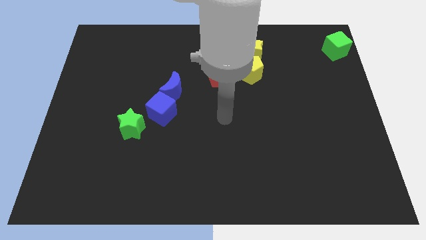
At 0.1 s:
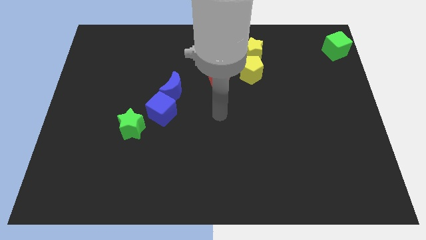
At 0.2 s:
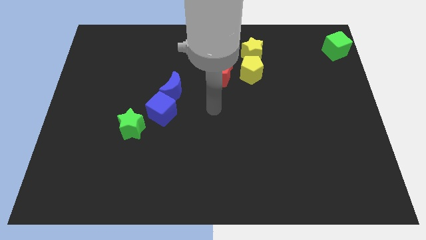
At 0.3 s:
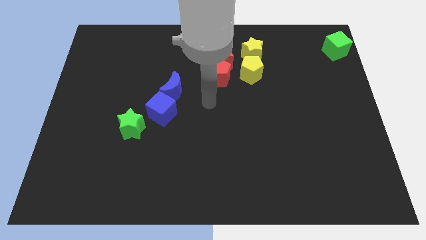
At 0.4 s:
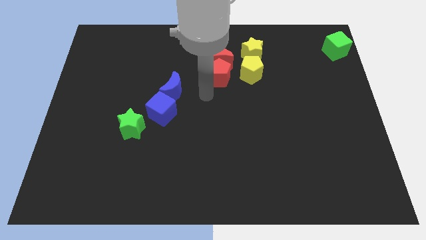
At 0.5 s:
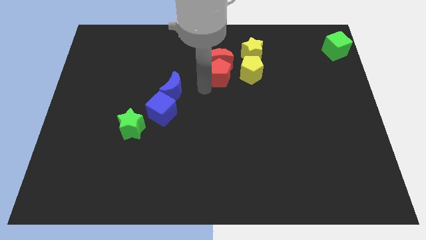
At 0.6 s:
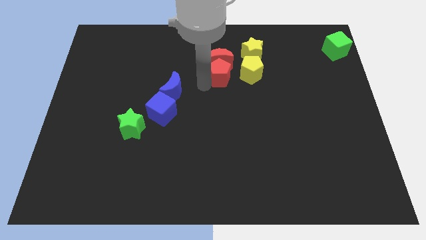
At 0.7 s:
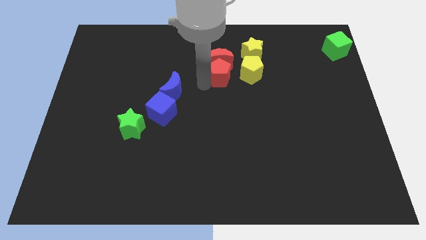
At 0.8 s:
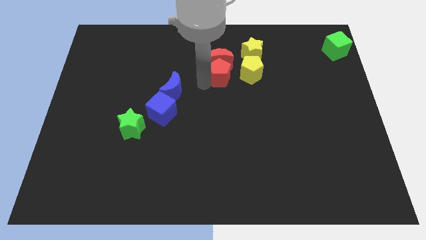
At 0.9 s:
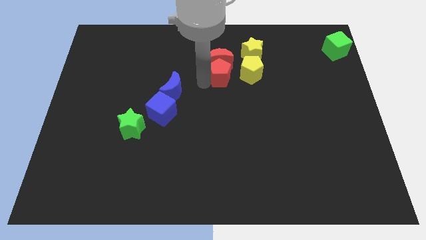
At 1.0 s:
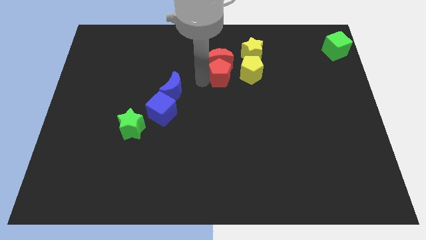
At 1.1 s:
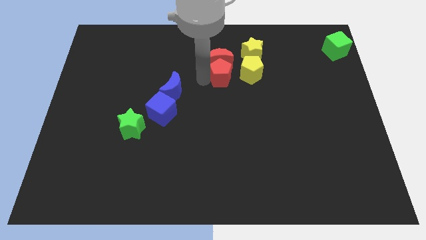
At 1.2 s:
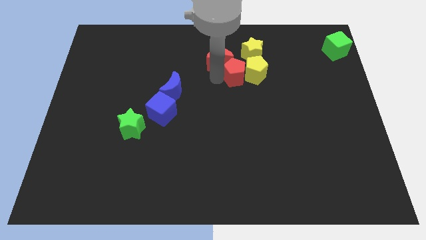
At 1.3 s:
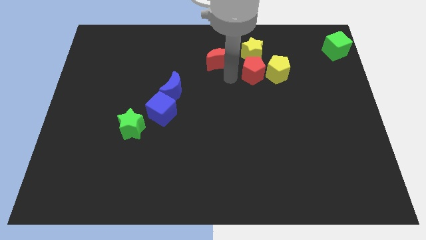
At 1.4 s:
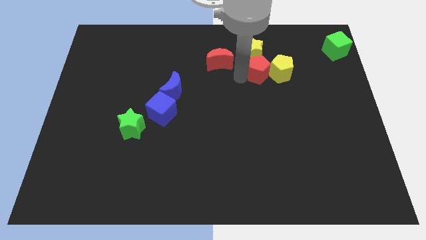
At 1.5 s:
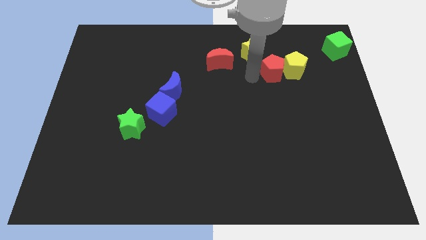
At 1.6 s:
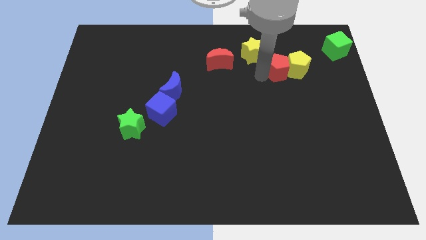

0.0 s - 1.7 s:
push yellow pentagon to the right side of the board with red pentagon

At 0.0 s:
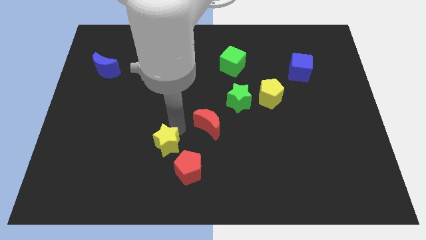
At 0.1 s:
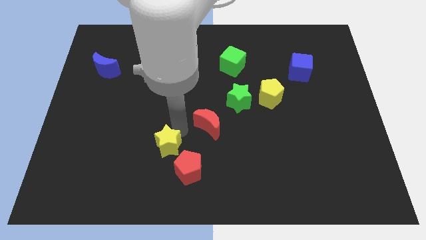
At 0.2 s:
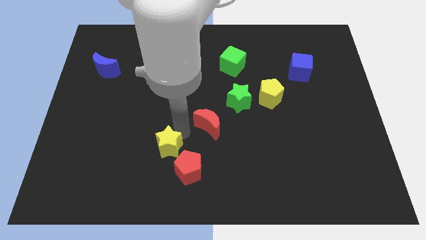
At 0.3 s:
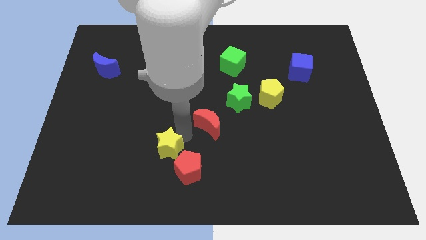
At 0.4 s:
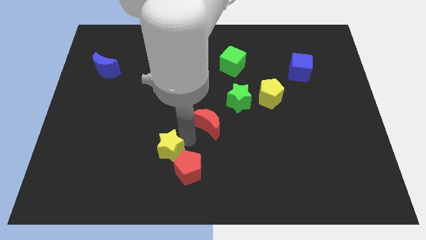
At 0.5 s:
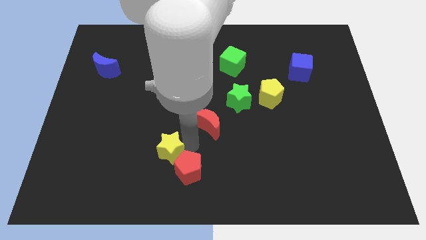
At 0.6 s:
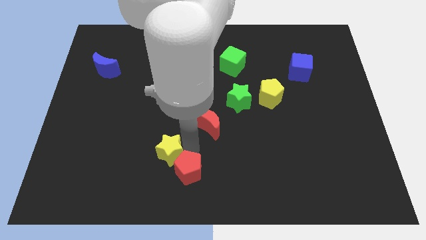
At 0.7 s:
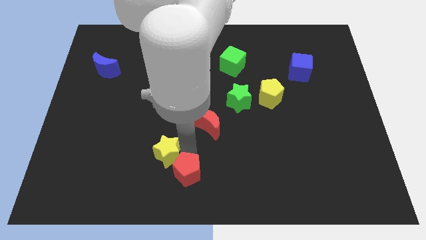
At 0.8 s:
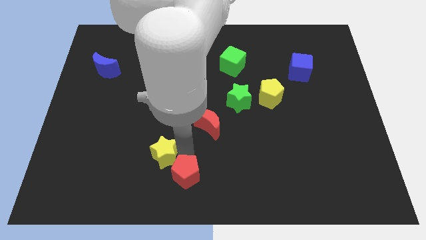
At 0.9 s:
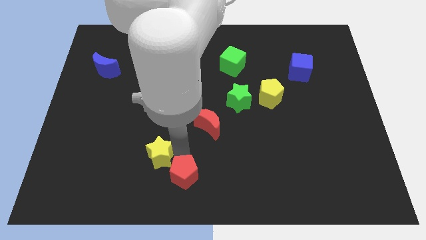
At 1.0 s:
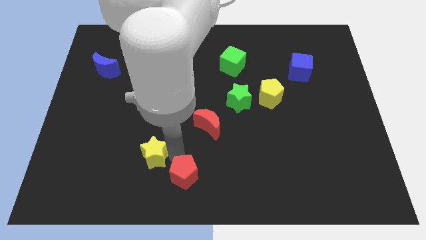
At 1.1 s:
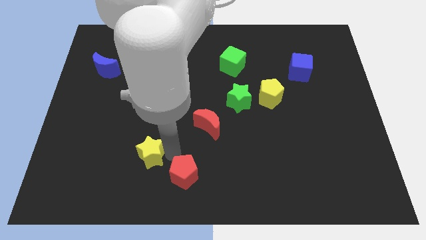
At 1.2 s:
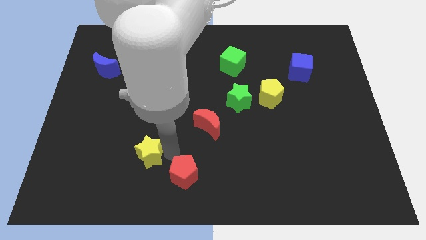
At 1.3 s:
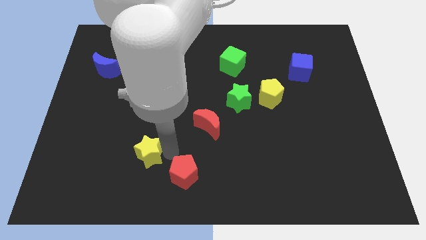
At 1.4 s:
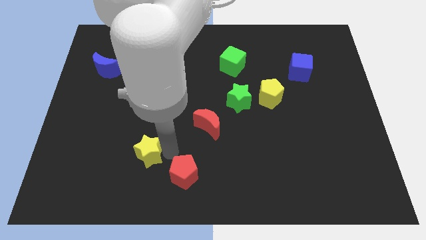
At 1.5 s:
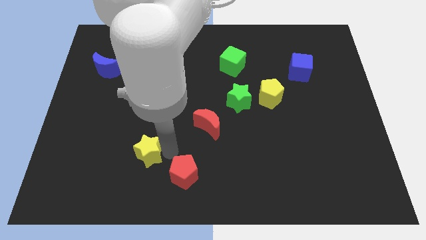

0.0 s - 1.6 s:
separate yellow star from the red pentagon

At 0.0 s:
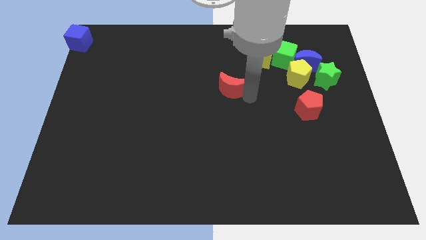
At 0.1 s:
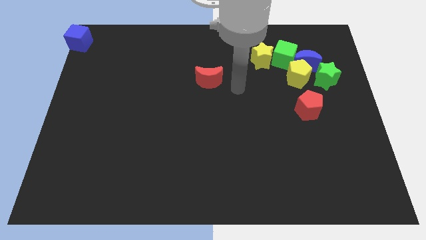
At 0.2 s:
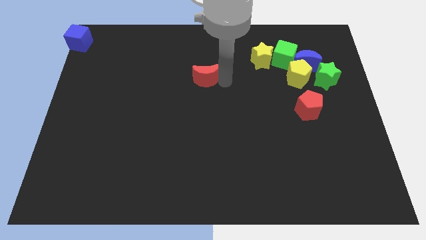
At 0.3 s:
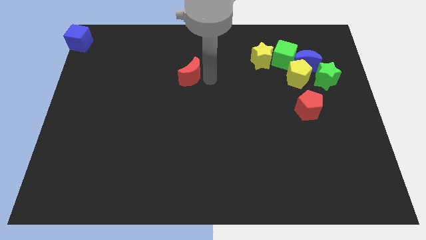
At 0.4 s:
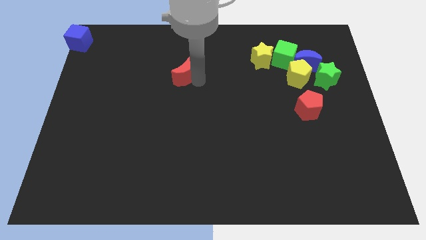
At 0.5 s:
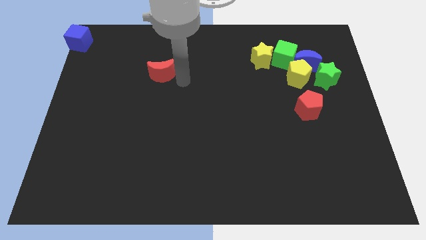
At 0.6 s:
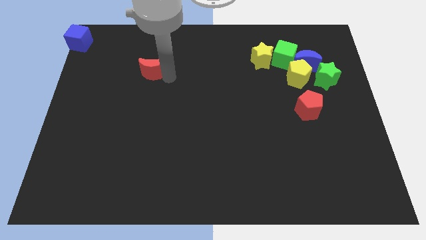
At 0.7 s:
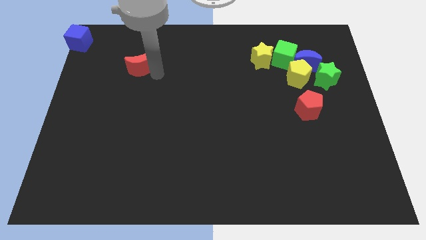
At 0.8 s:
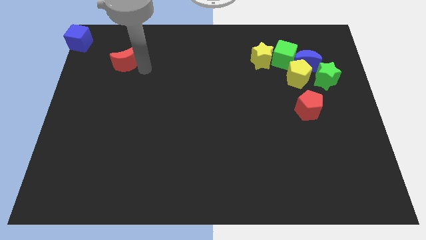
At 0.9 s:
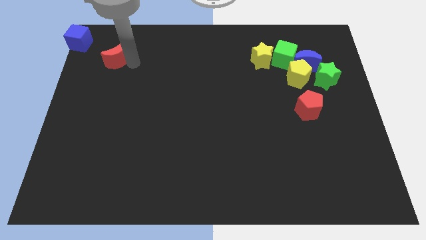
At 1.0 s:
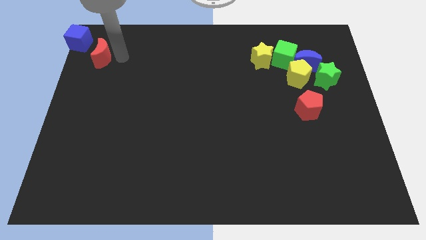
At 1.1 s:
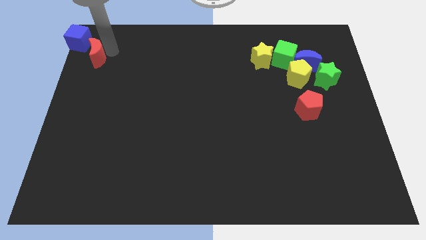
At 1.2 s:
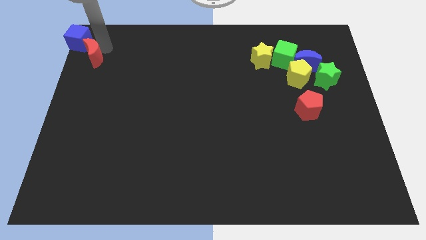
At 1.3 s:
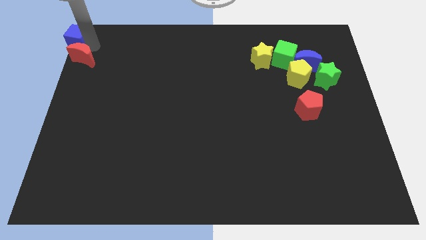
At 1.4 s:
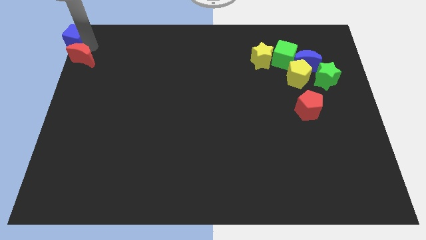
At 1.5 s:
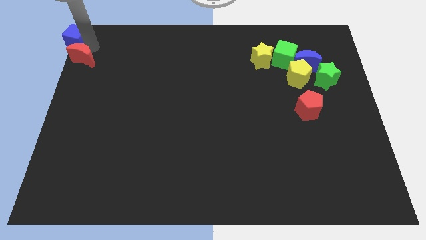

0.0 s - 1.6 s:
move the red crescent to the bottom right of the blue cube

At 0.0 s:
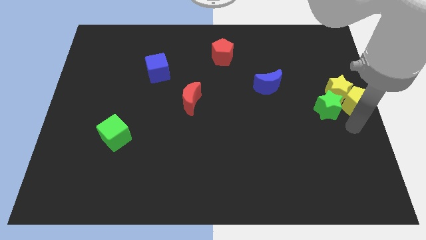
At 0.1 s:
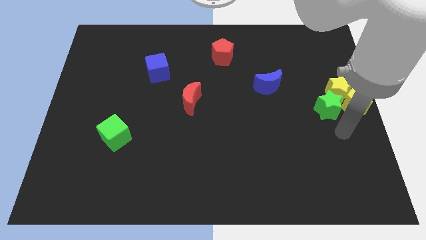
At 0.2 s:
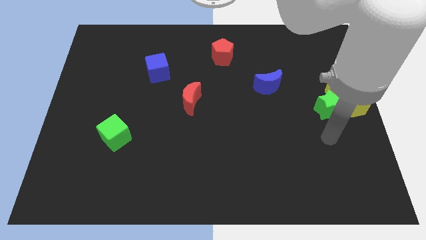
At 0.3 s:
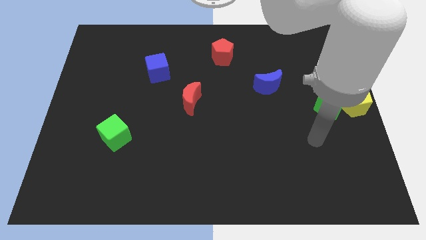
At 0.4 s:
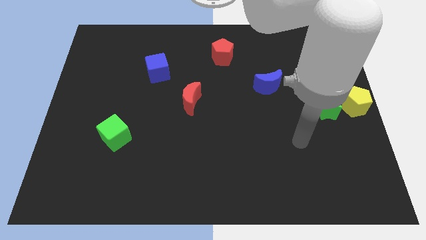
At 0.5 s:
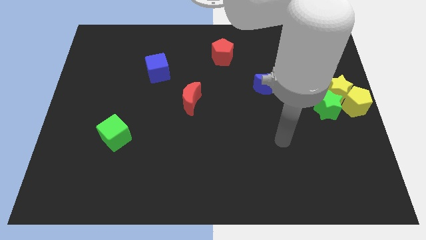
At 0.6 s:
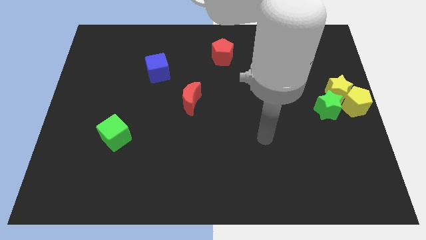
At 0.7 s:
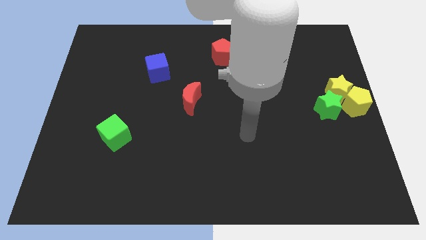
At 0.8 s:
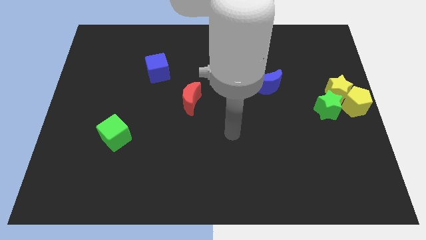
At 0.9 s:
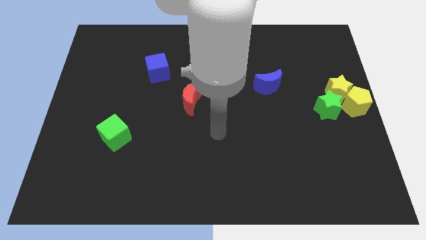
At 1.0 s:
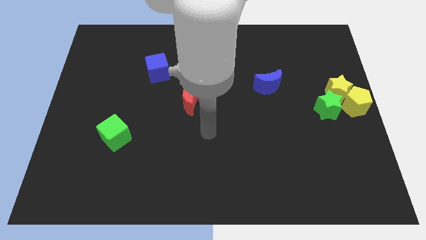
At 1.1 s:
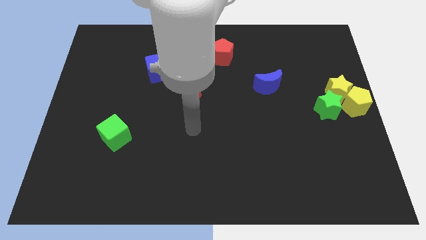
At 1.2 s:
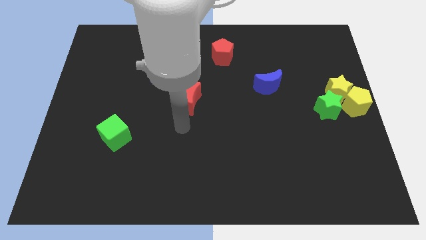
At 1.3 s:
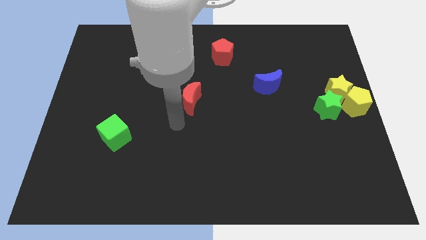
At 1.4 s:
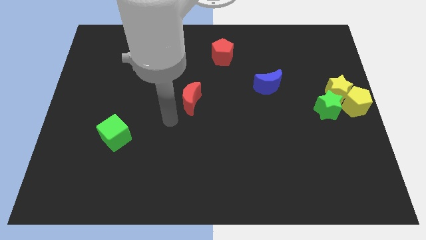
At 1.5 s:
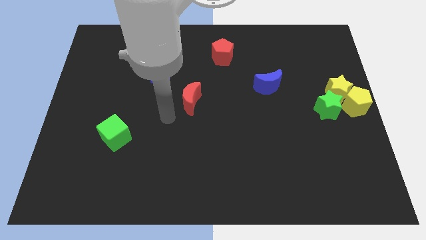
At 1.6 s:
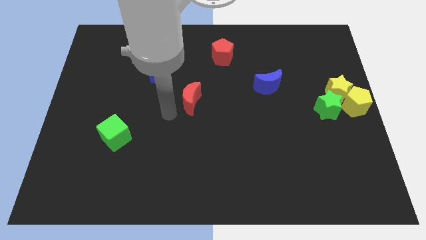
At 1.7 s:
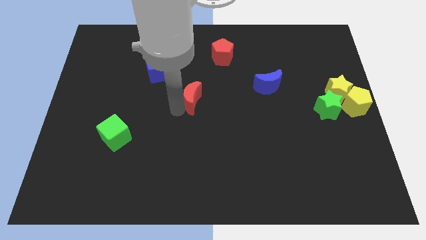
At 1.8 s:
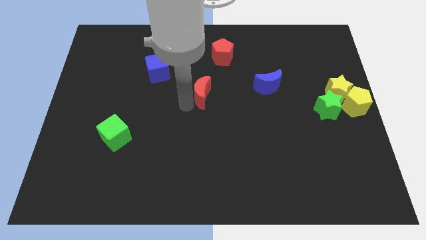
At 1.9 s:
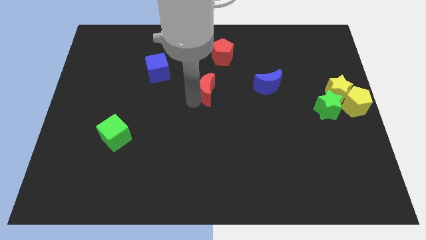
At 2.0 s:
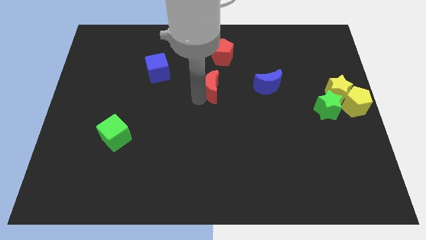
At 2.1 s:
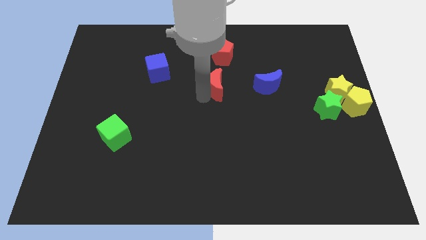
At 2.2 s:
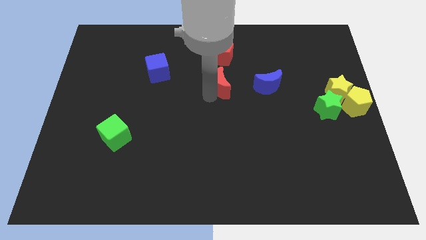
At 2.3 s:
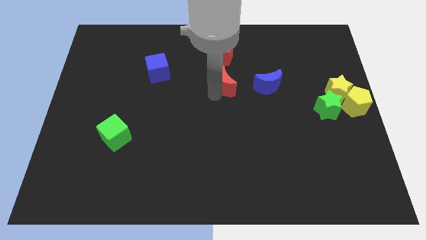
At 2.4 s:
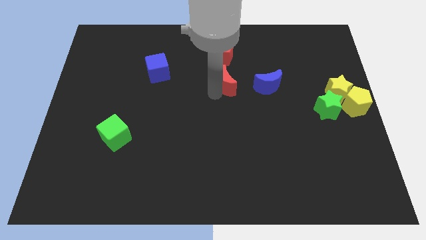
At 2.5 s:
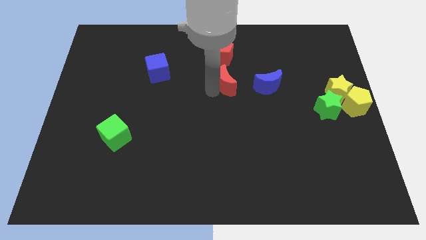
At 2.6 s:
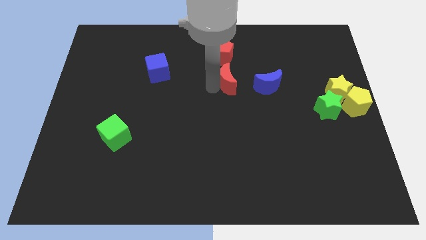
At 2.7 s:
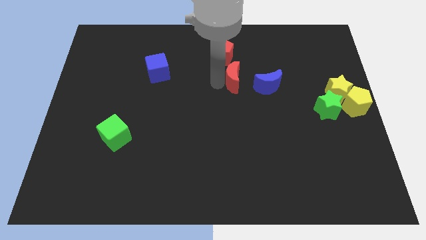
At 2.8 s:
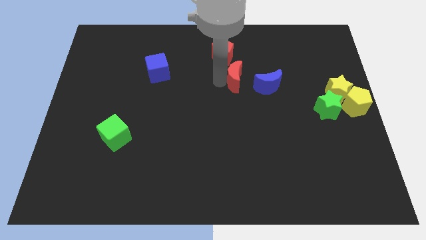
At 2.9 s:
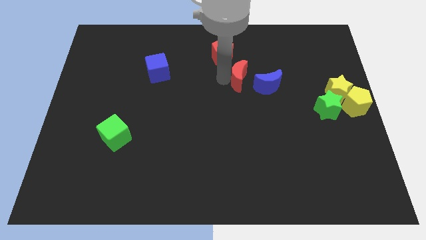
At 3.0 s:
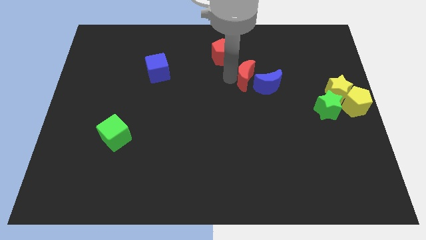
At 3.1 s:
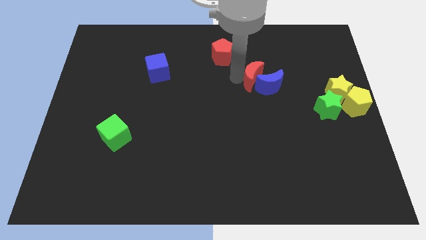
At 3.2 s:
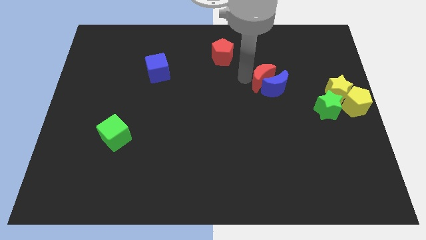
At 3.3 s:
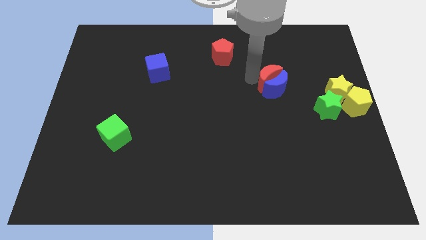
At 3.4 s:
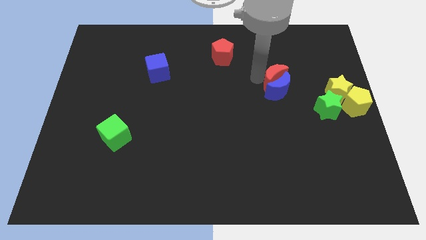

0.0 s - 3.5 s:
push the red moon above into blue moon

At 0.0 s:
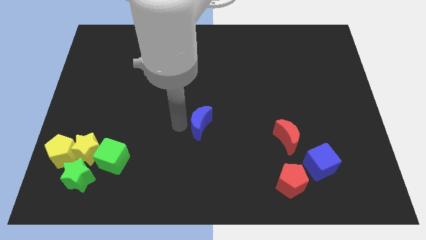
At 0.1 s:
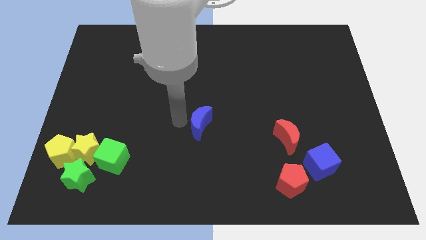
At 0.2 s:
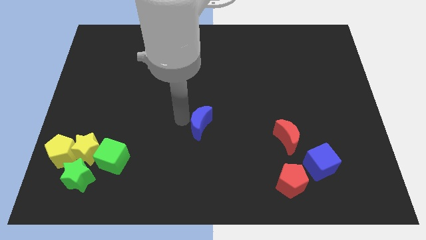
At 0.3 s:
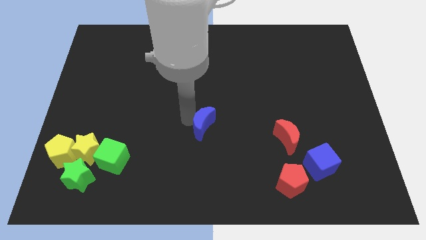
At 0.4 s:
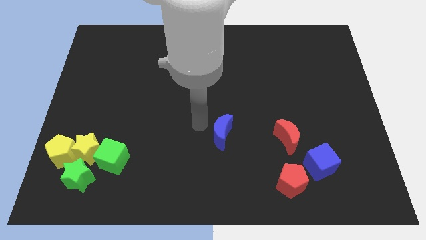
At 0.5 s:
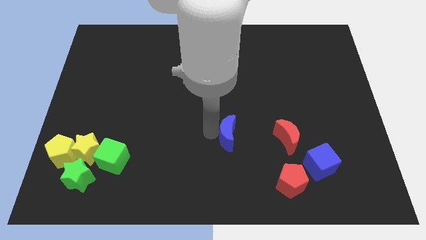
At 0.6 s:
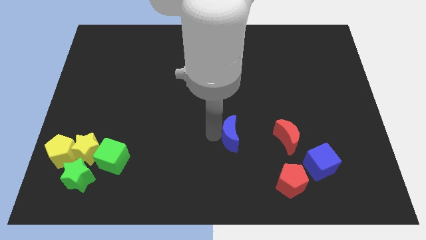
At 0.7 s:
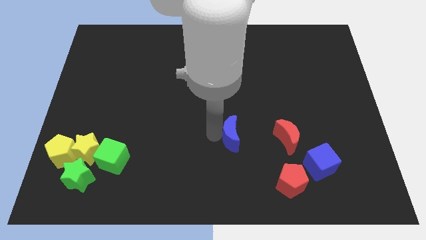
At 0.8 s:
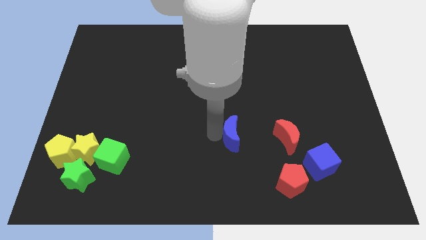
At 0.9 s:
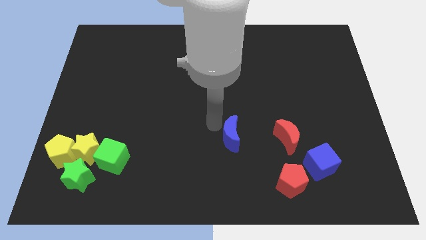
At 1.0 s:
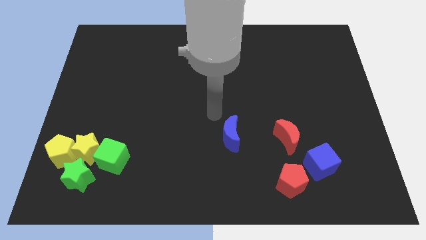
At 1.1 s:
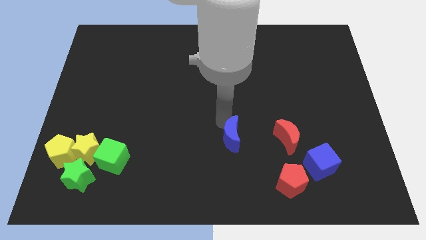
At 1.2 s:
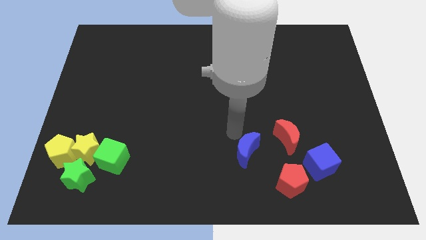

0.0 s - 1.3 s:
push the blue crescent to the left of the red crescent
